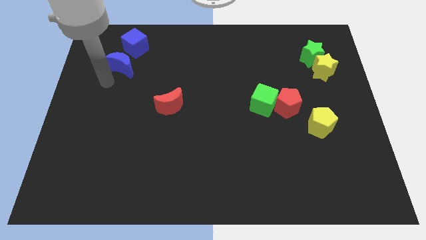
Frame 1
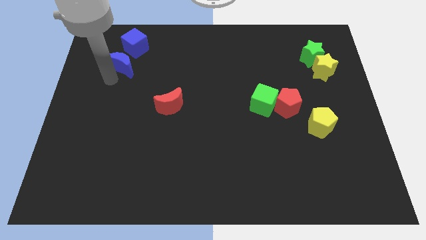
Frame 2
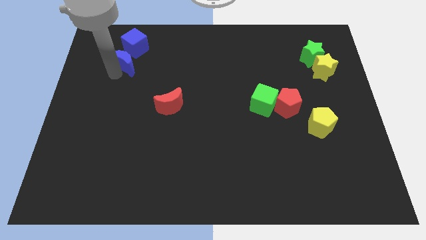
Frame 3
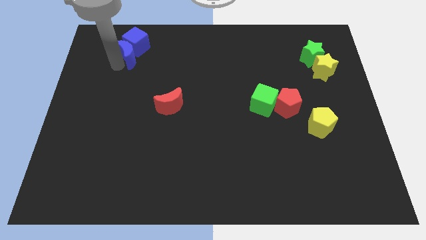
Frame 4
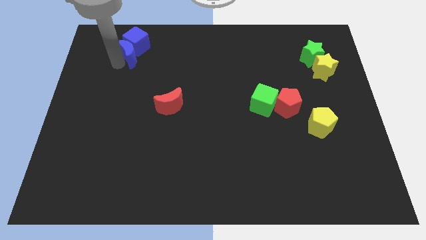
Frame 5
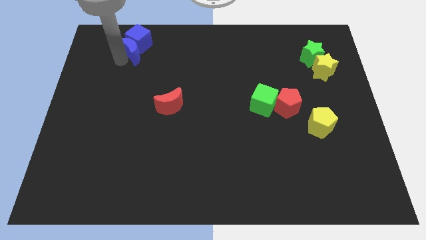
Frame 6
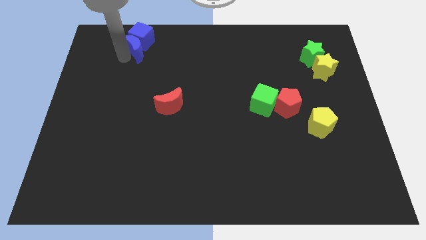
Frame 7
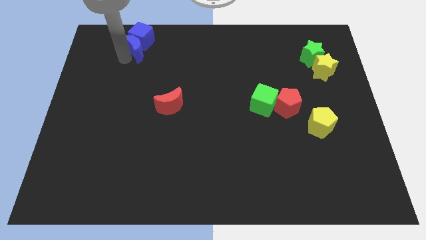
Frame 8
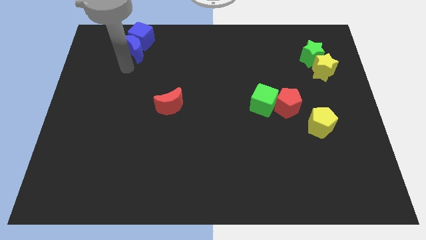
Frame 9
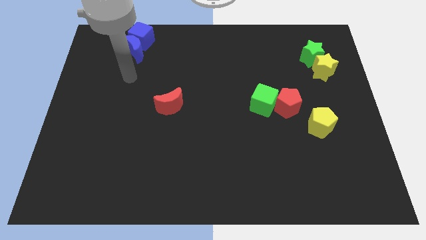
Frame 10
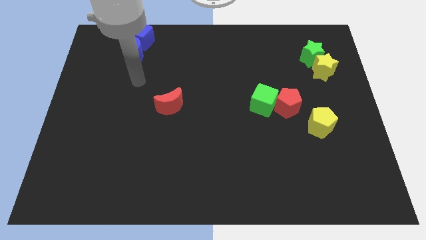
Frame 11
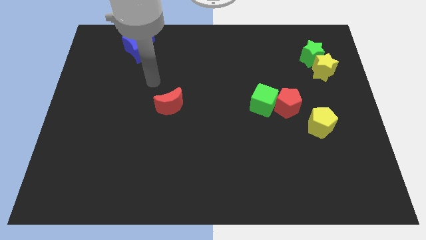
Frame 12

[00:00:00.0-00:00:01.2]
slightly move blue blocks to the top left of the board

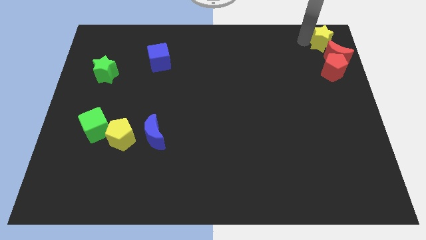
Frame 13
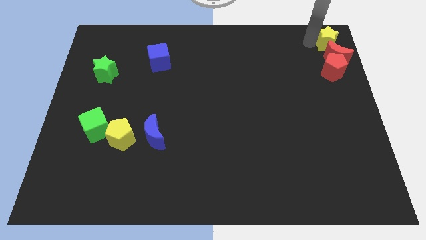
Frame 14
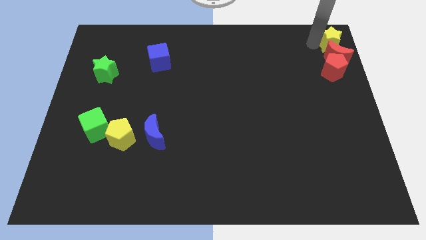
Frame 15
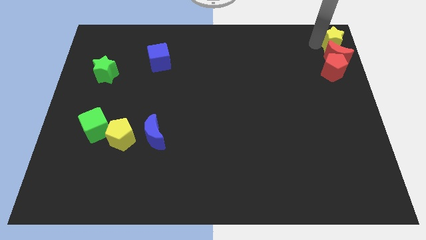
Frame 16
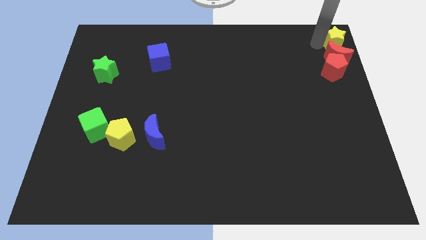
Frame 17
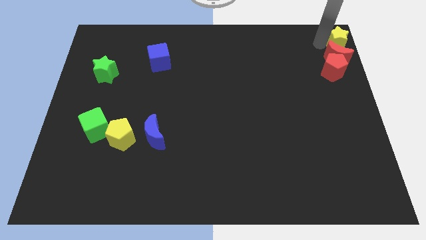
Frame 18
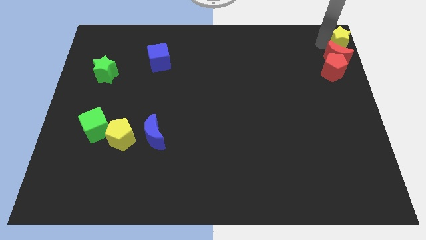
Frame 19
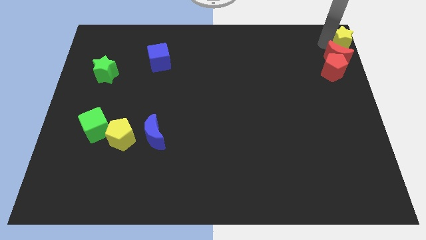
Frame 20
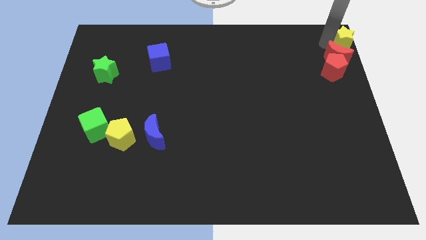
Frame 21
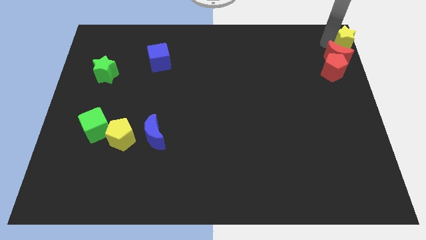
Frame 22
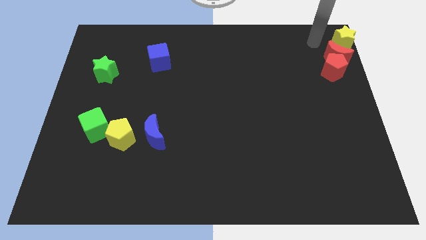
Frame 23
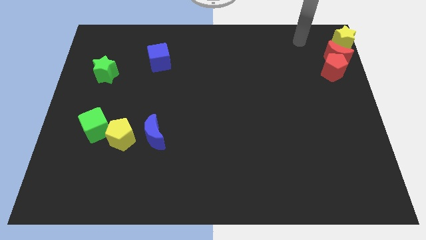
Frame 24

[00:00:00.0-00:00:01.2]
push yellow star to the top right corner of the board

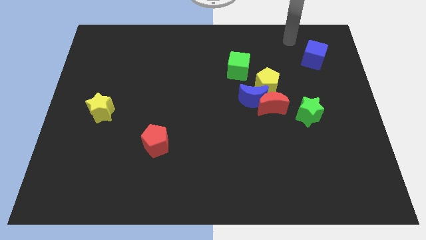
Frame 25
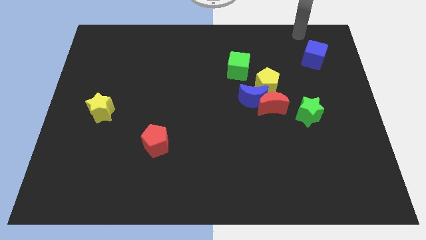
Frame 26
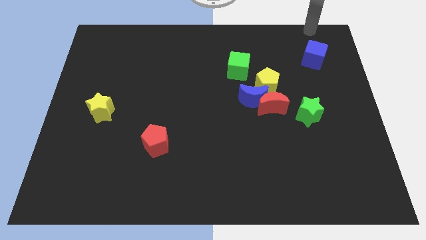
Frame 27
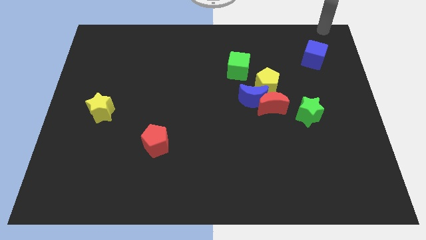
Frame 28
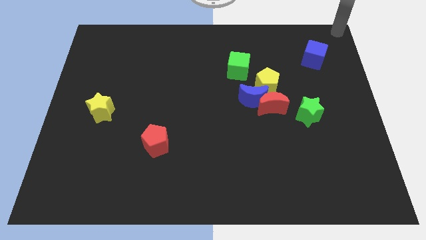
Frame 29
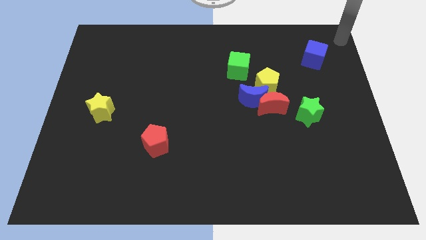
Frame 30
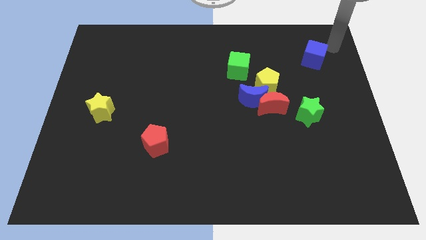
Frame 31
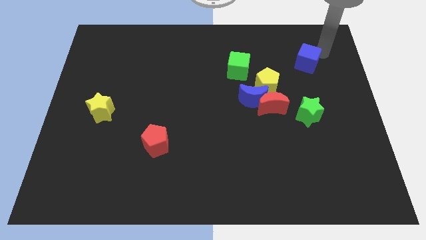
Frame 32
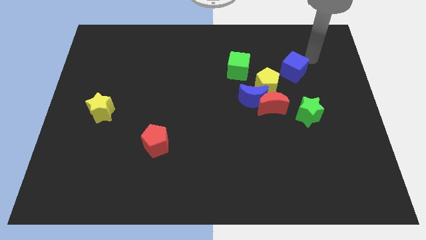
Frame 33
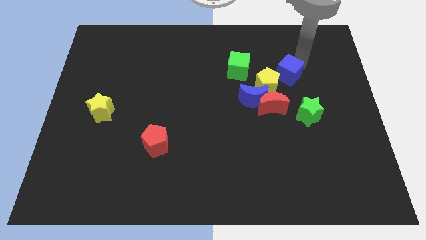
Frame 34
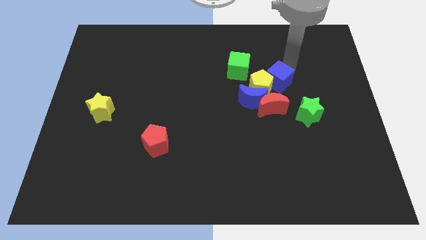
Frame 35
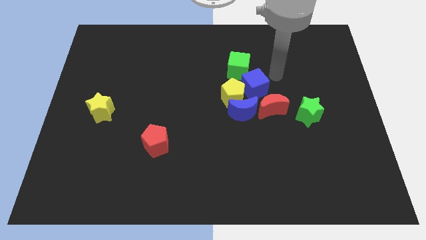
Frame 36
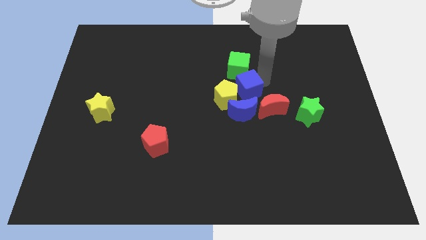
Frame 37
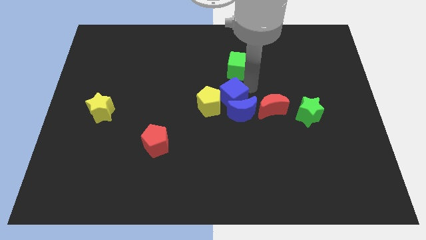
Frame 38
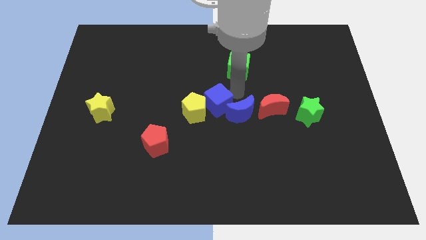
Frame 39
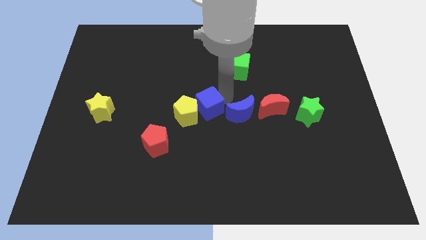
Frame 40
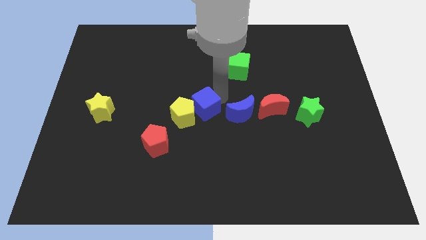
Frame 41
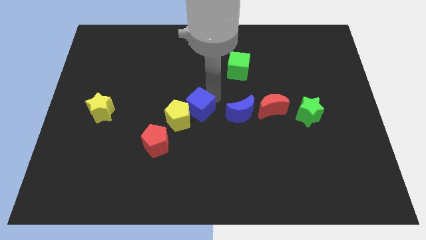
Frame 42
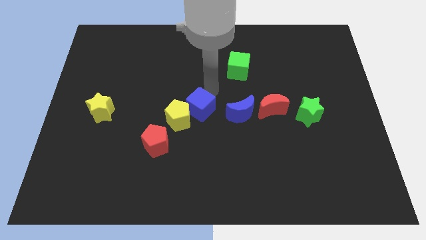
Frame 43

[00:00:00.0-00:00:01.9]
push blue cube to the center of the board

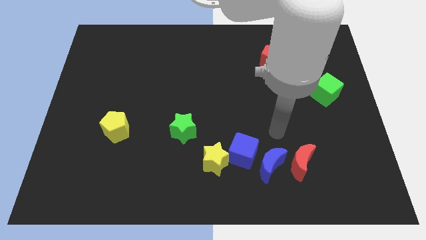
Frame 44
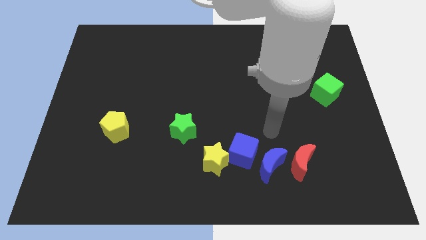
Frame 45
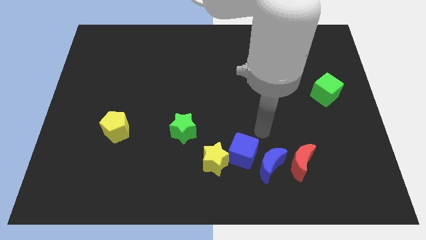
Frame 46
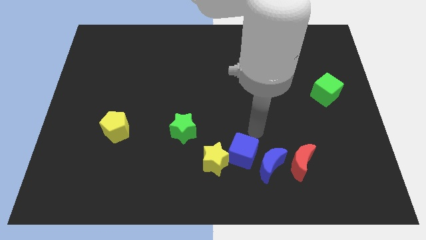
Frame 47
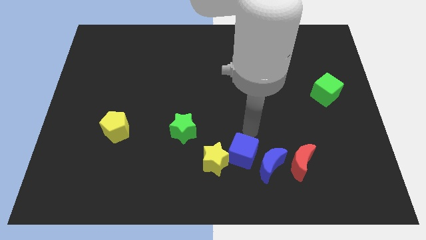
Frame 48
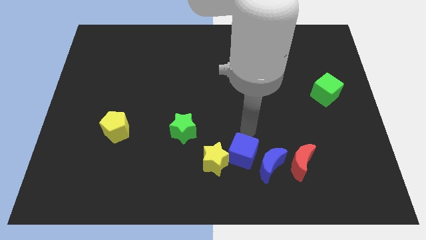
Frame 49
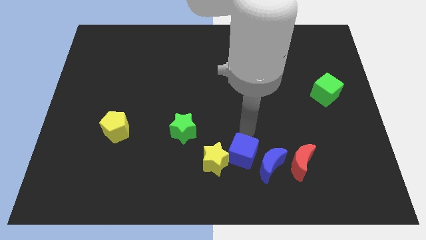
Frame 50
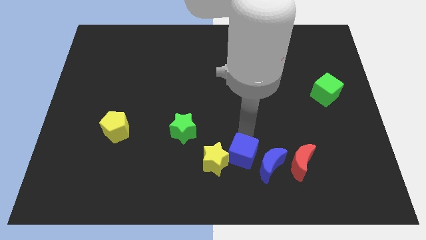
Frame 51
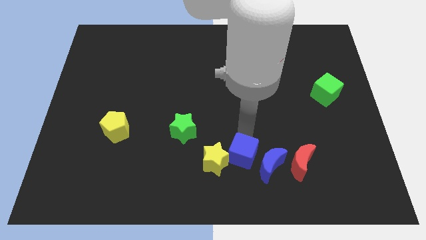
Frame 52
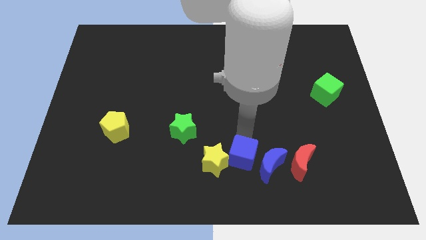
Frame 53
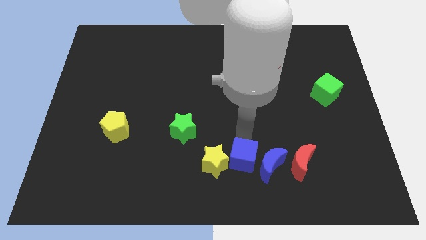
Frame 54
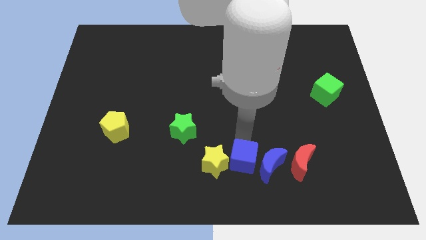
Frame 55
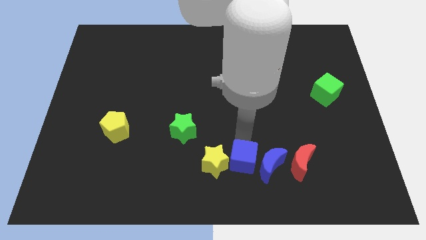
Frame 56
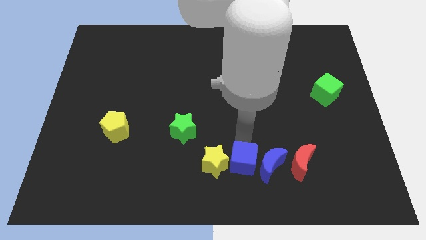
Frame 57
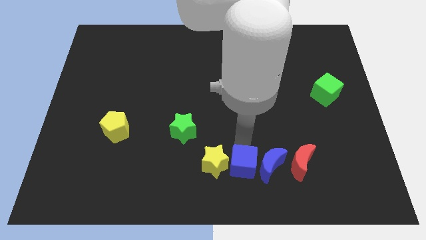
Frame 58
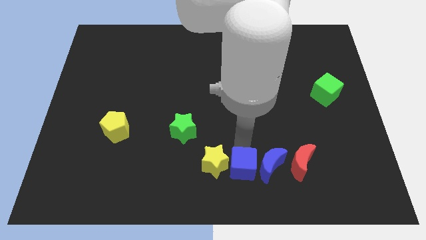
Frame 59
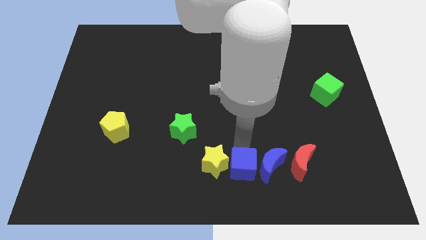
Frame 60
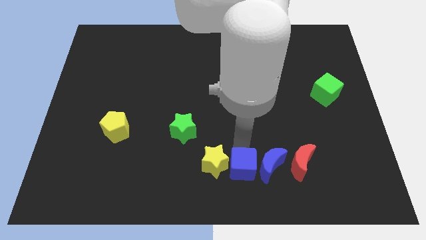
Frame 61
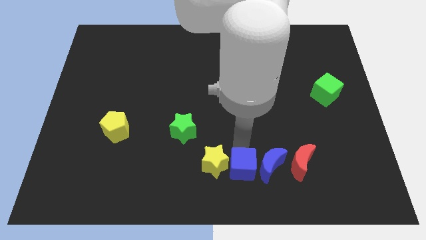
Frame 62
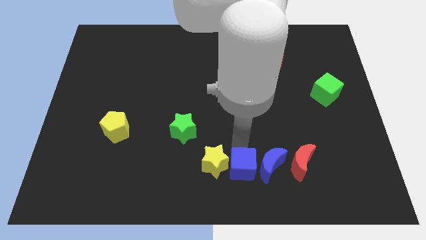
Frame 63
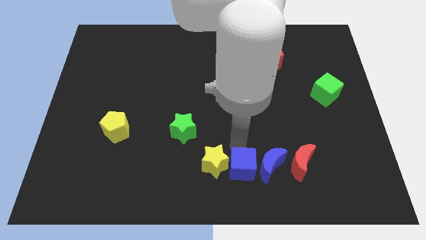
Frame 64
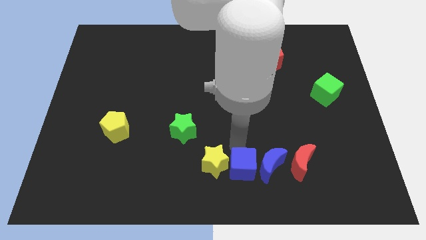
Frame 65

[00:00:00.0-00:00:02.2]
place the blue cube in between the blue crescent and yellow star

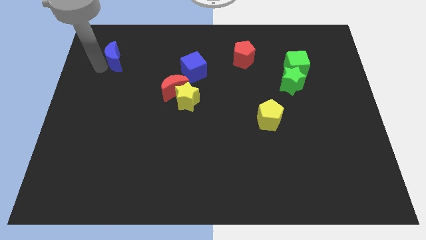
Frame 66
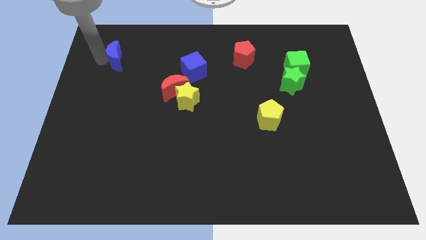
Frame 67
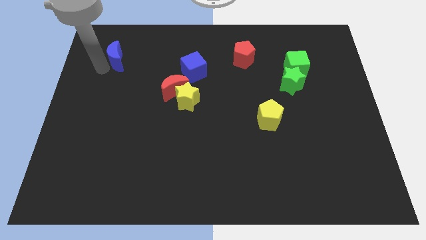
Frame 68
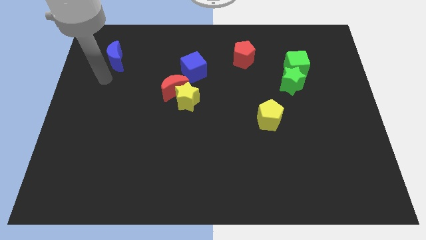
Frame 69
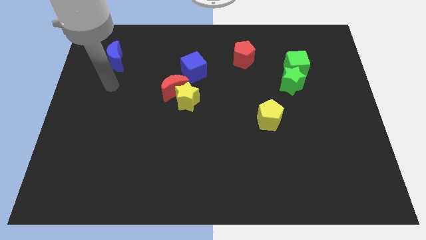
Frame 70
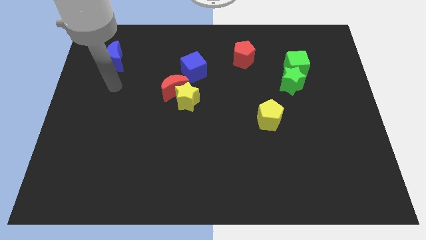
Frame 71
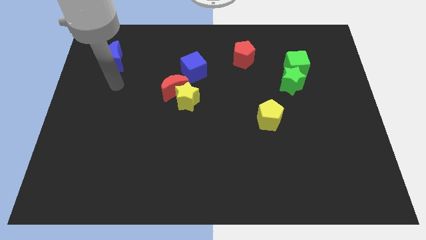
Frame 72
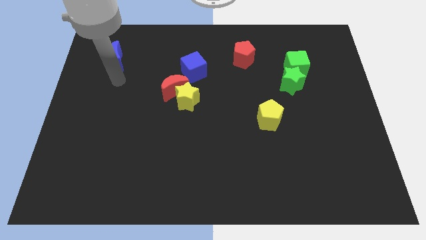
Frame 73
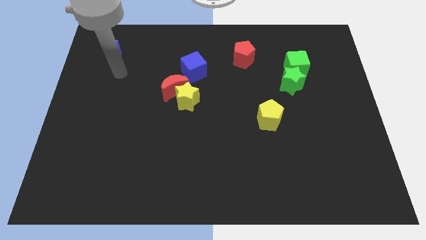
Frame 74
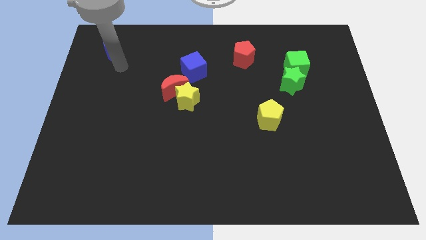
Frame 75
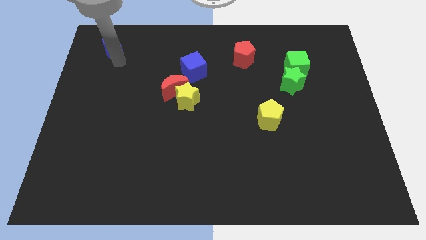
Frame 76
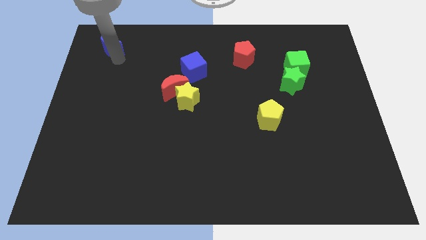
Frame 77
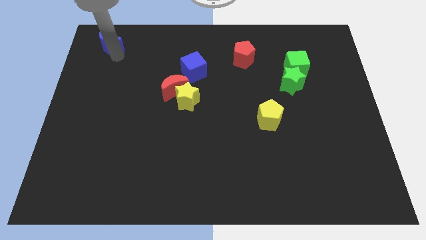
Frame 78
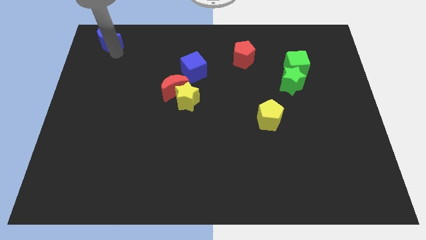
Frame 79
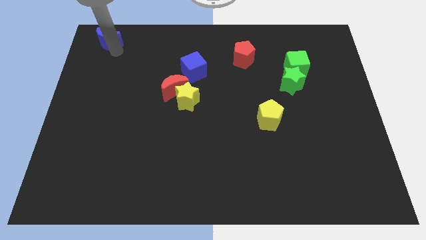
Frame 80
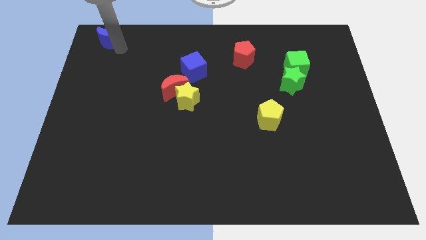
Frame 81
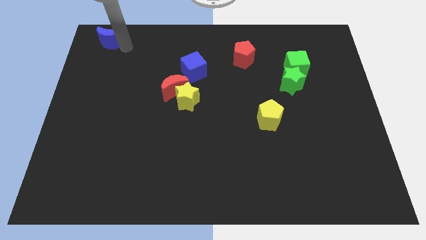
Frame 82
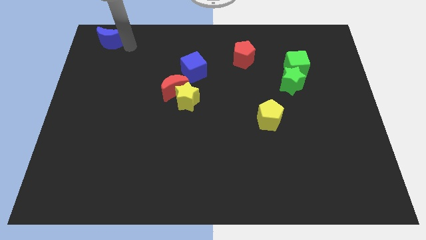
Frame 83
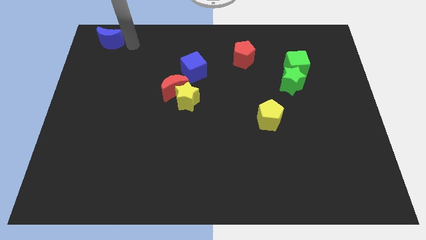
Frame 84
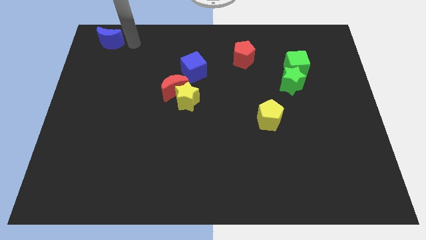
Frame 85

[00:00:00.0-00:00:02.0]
slightly move the blue moon towards top

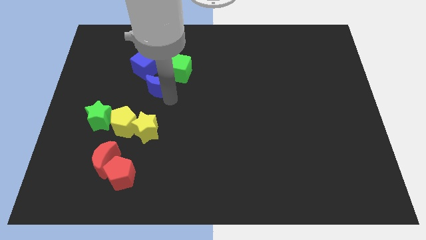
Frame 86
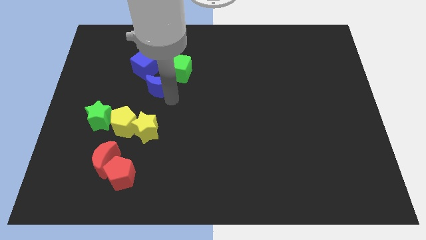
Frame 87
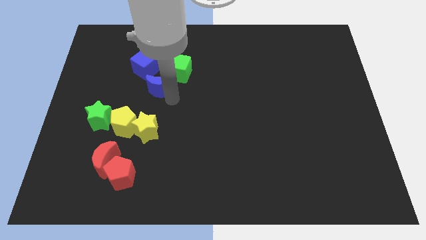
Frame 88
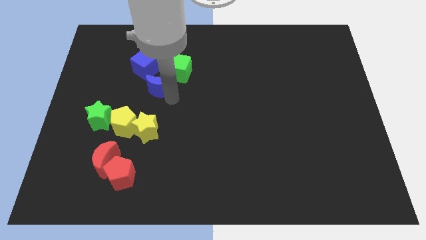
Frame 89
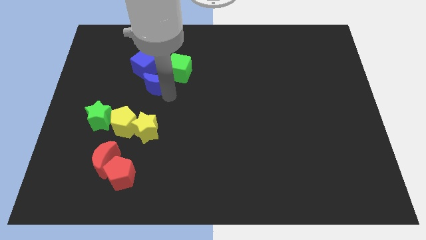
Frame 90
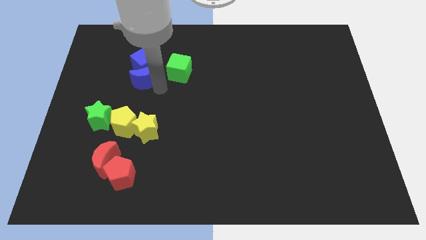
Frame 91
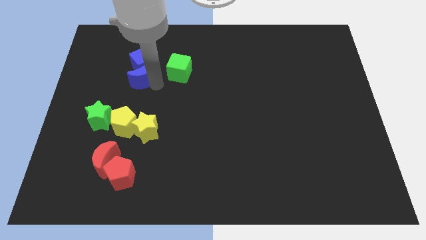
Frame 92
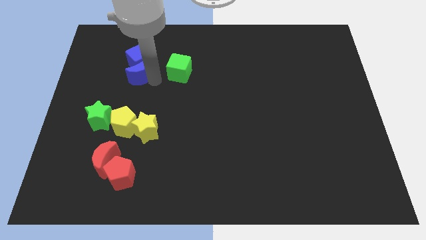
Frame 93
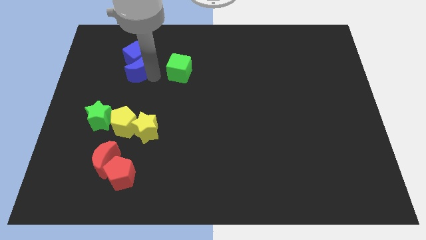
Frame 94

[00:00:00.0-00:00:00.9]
push the blue crescent into blue cube
